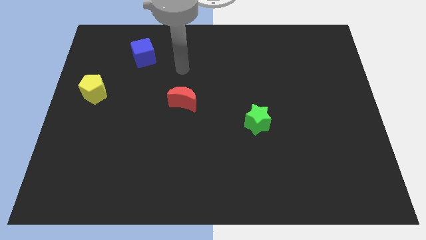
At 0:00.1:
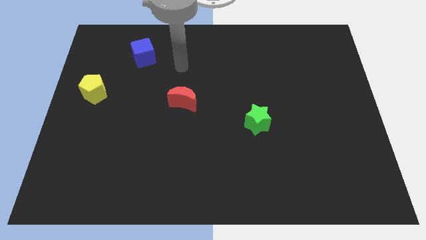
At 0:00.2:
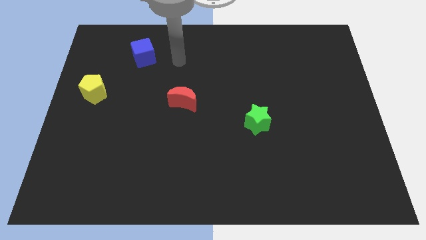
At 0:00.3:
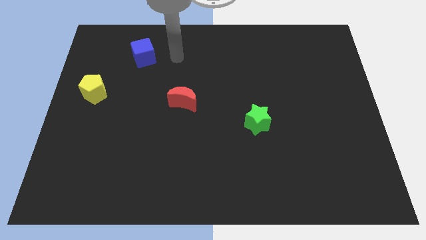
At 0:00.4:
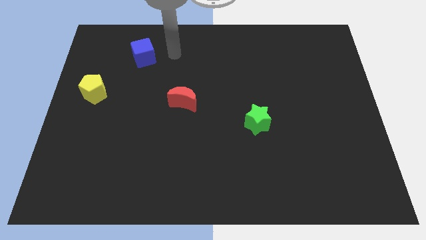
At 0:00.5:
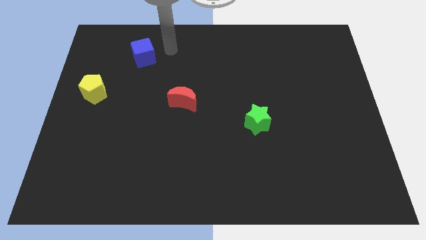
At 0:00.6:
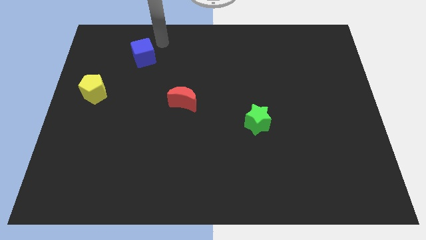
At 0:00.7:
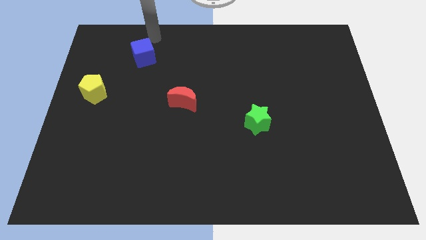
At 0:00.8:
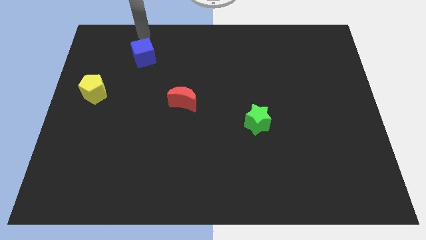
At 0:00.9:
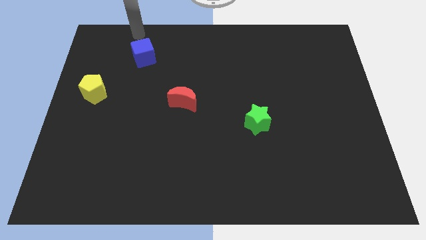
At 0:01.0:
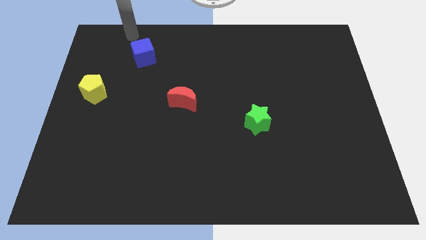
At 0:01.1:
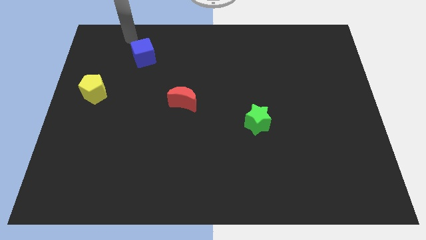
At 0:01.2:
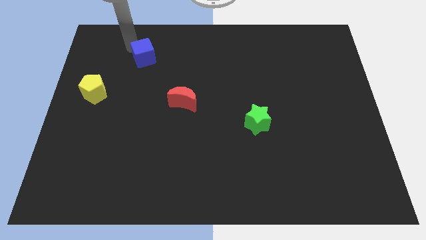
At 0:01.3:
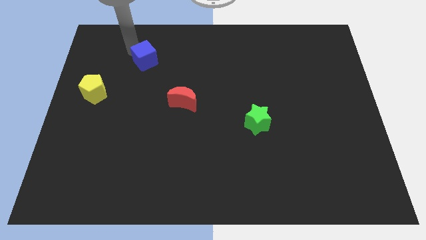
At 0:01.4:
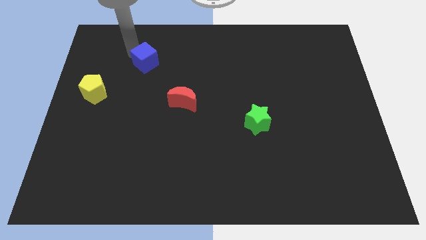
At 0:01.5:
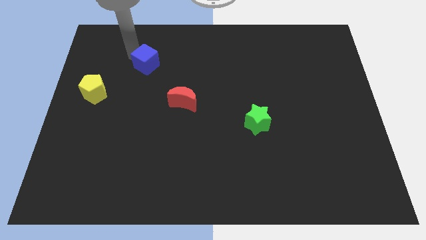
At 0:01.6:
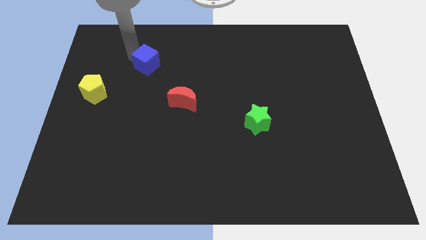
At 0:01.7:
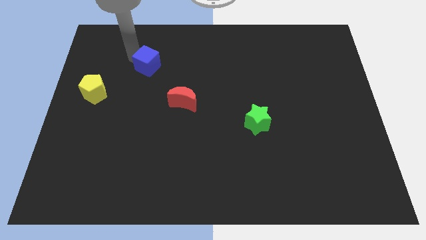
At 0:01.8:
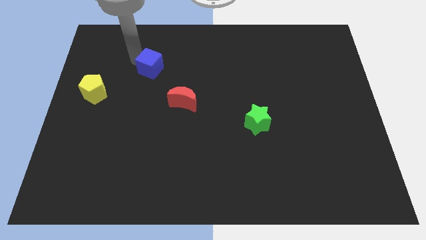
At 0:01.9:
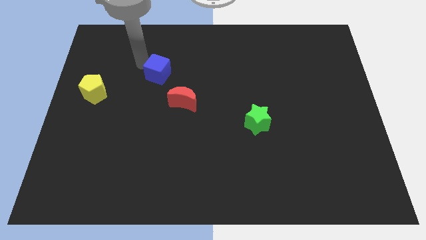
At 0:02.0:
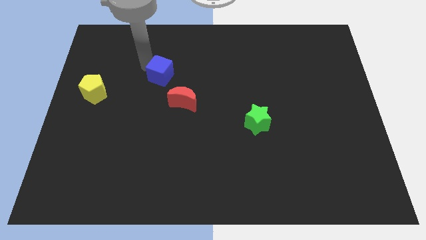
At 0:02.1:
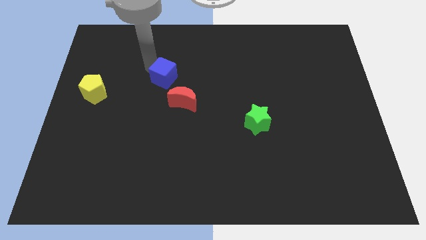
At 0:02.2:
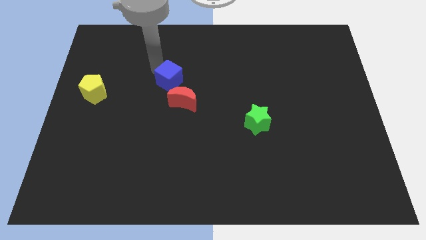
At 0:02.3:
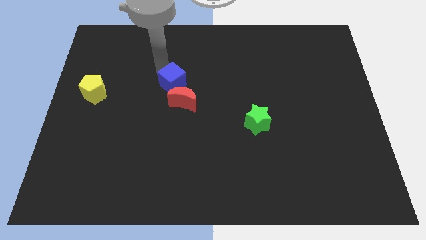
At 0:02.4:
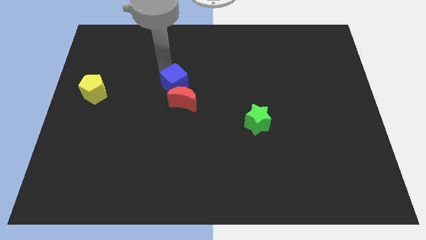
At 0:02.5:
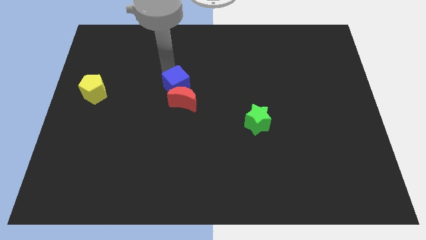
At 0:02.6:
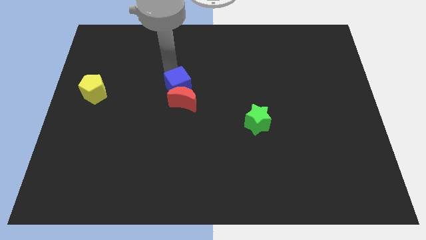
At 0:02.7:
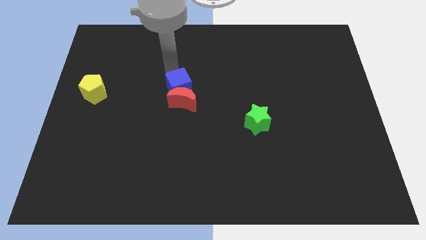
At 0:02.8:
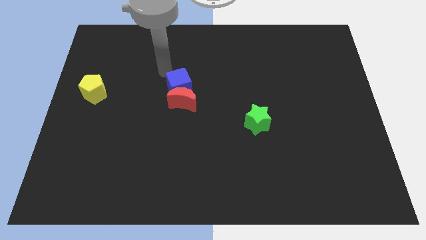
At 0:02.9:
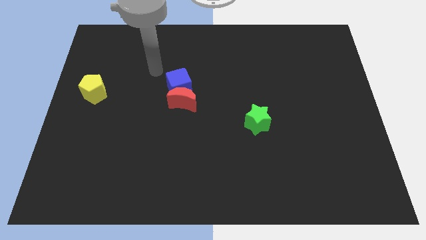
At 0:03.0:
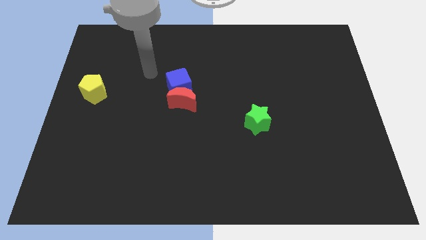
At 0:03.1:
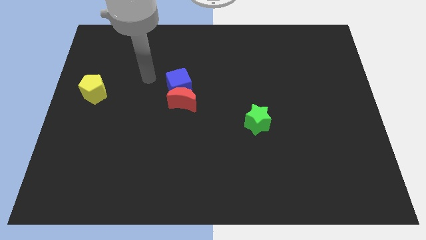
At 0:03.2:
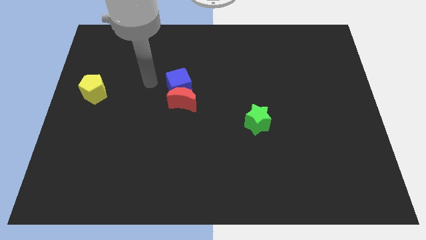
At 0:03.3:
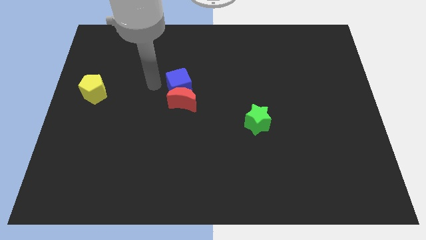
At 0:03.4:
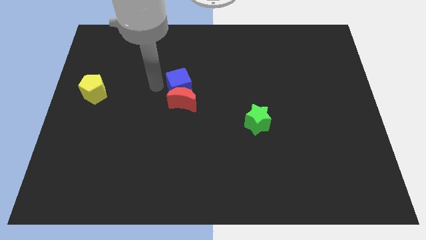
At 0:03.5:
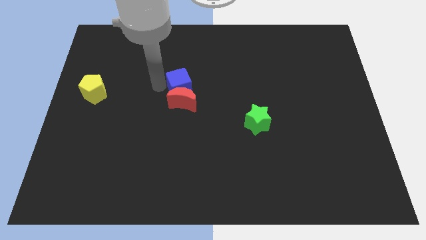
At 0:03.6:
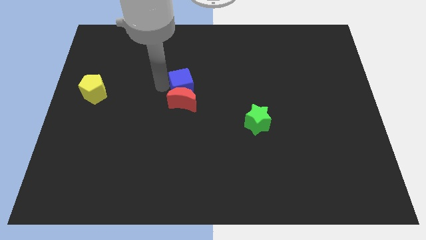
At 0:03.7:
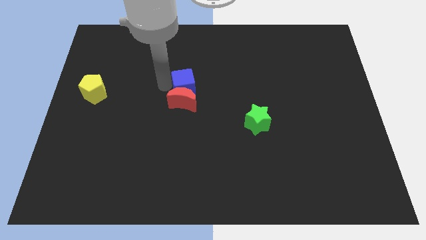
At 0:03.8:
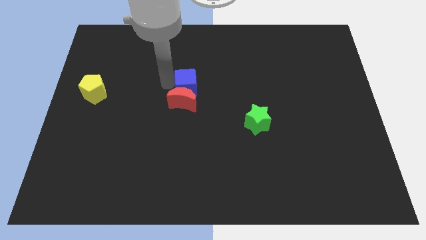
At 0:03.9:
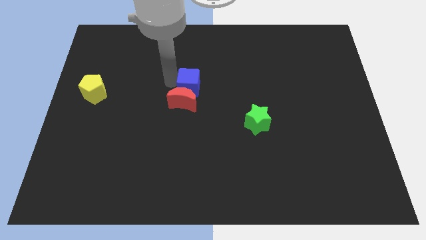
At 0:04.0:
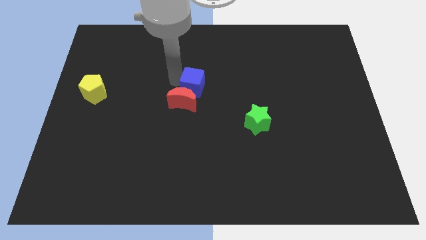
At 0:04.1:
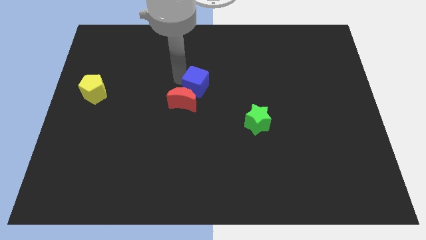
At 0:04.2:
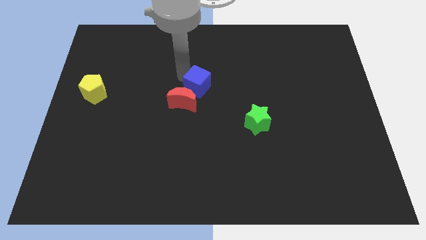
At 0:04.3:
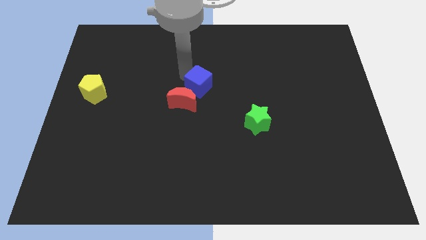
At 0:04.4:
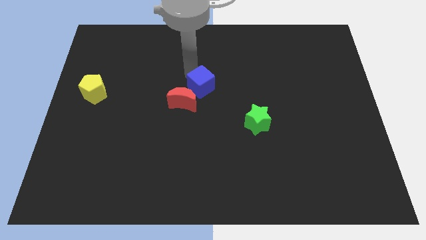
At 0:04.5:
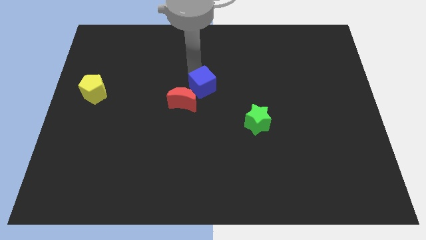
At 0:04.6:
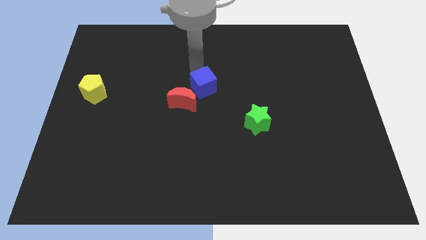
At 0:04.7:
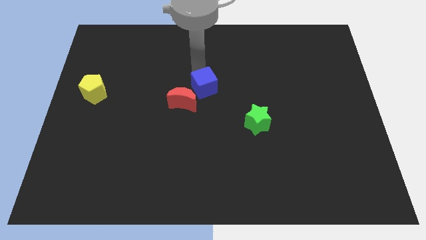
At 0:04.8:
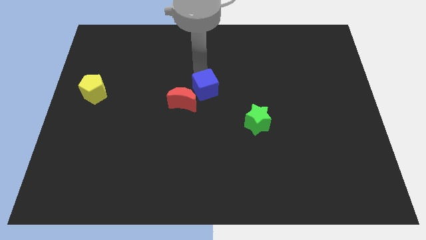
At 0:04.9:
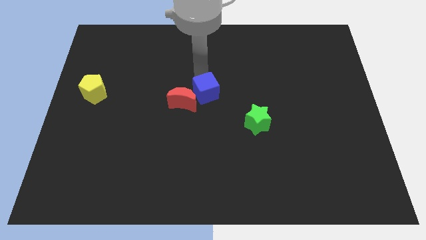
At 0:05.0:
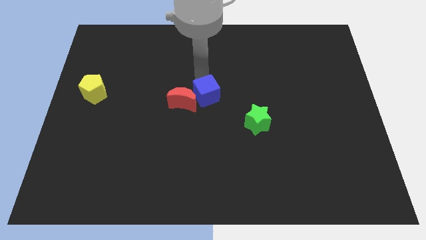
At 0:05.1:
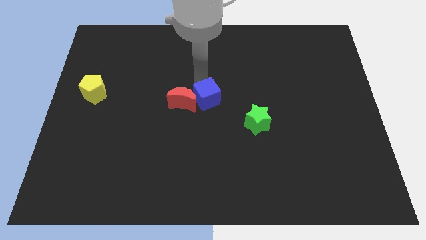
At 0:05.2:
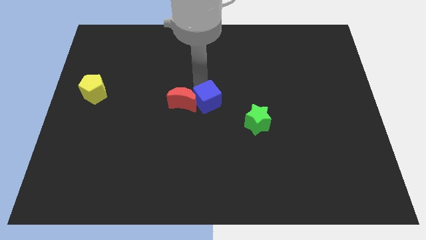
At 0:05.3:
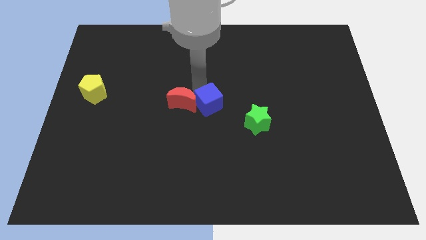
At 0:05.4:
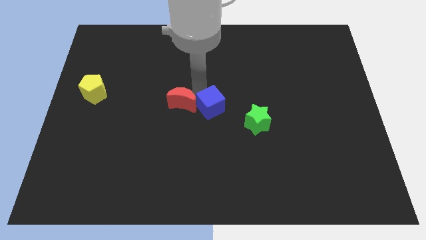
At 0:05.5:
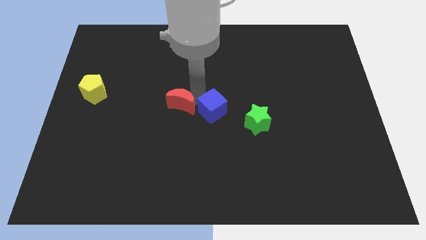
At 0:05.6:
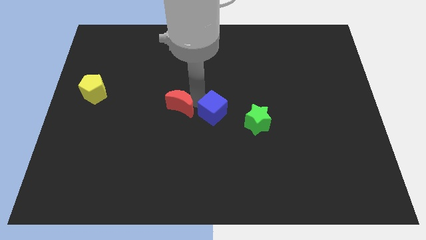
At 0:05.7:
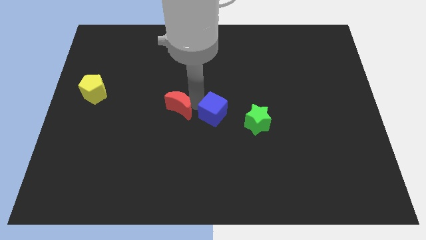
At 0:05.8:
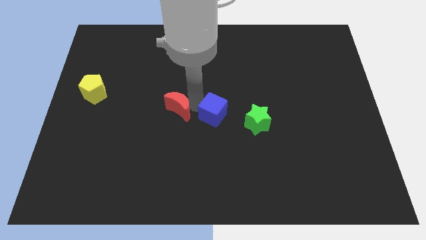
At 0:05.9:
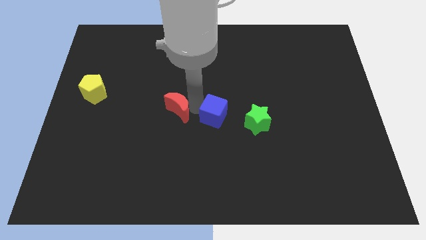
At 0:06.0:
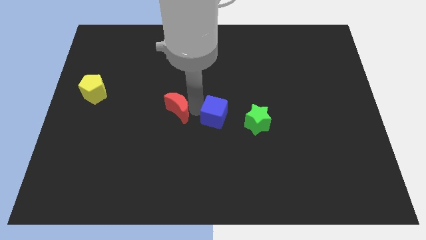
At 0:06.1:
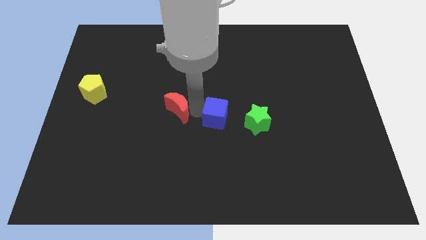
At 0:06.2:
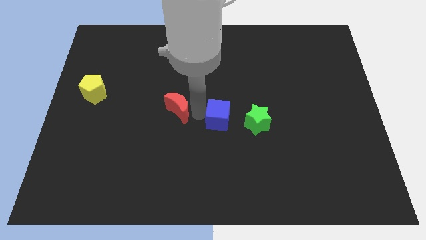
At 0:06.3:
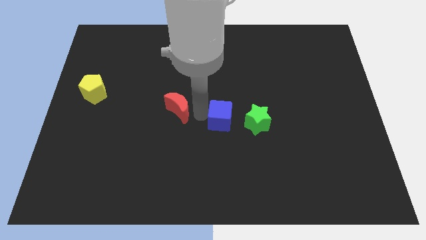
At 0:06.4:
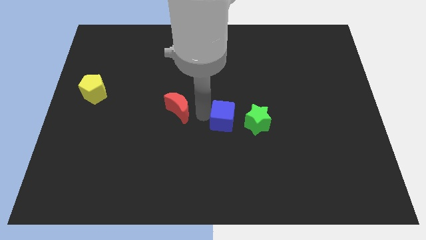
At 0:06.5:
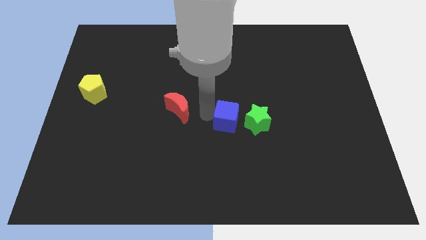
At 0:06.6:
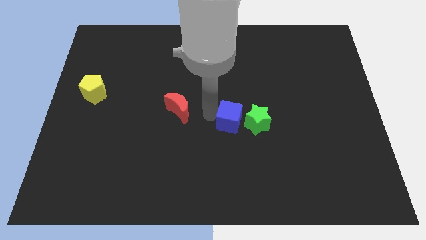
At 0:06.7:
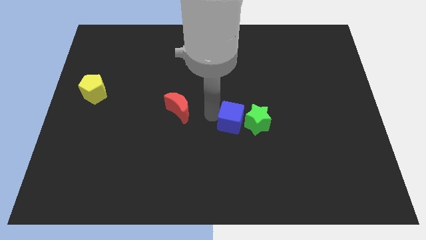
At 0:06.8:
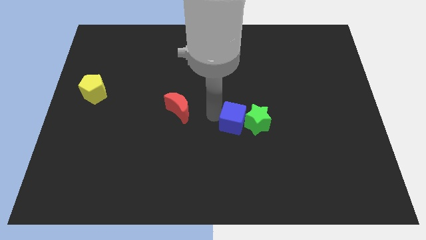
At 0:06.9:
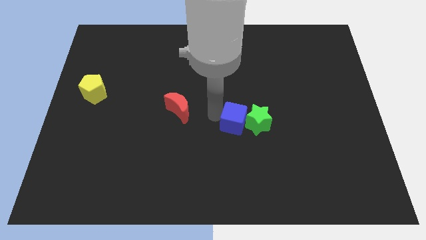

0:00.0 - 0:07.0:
move the cube next to the green block

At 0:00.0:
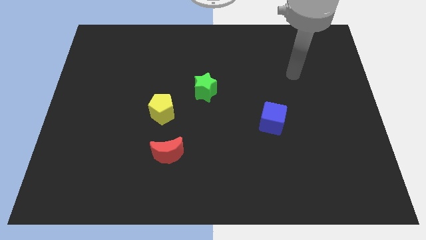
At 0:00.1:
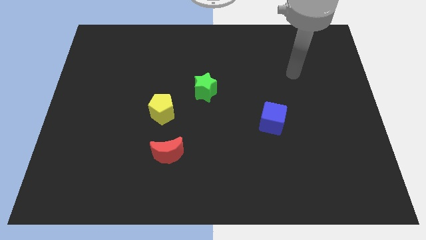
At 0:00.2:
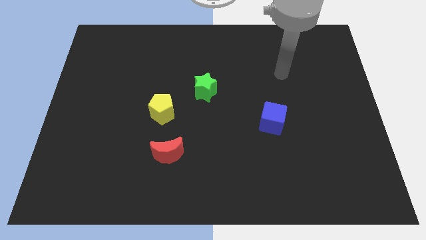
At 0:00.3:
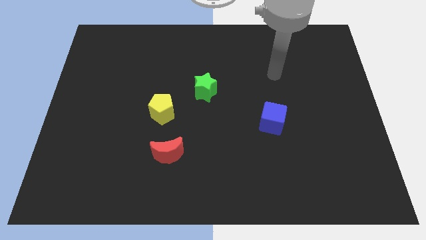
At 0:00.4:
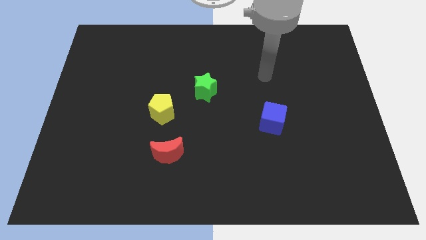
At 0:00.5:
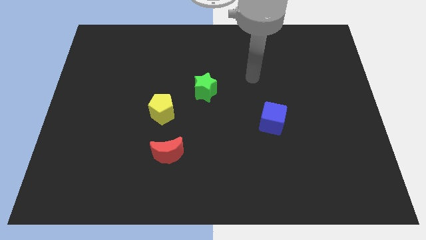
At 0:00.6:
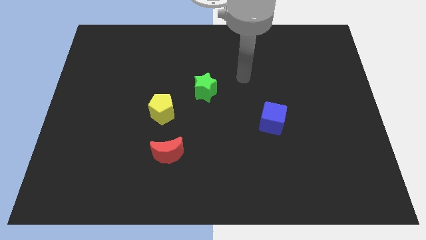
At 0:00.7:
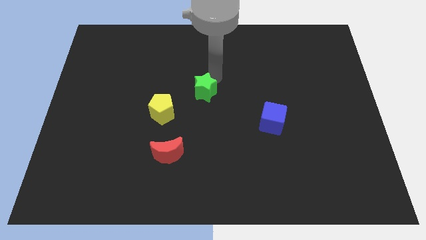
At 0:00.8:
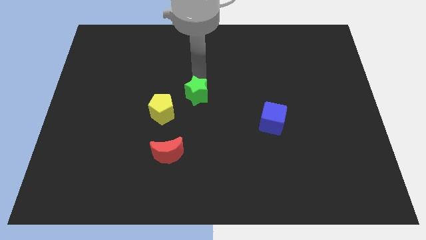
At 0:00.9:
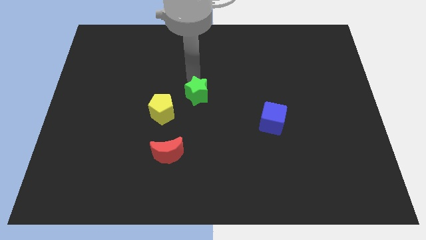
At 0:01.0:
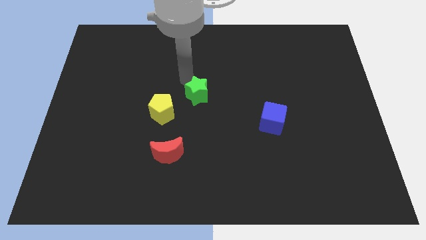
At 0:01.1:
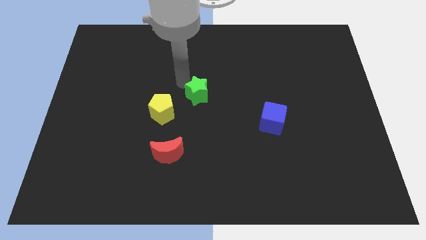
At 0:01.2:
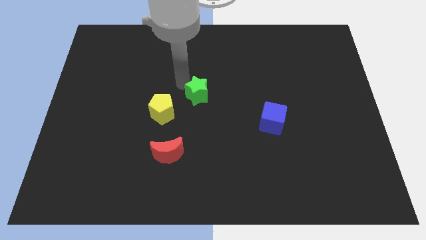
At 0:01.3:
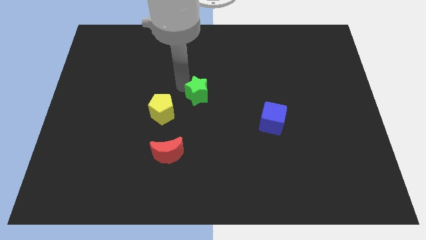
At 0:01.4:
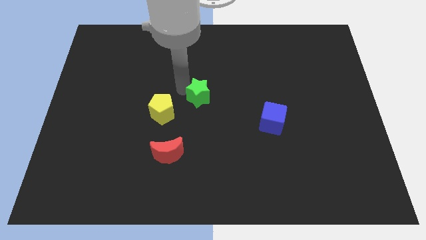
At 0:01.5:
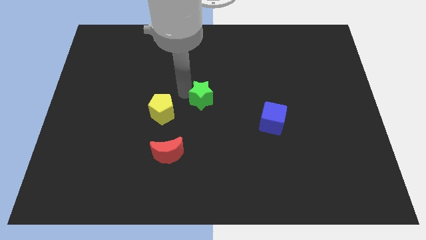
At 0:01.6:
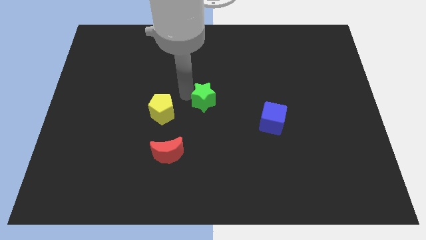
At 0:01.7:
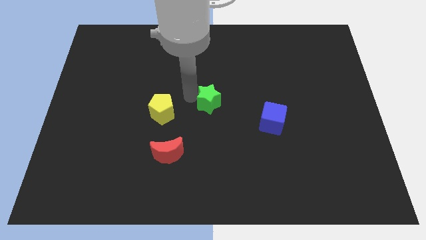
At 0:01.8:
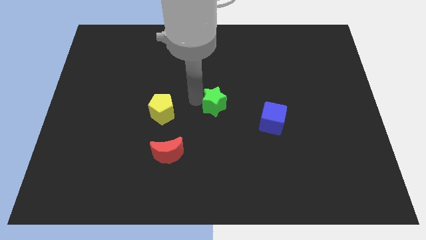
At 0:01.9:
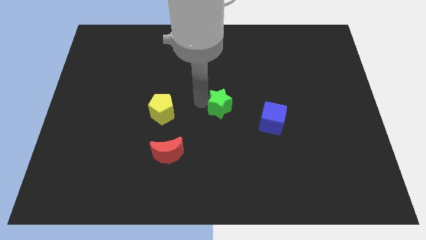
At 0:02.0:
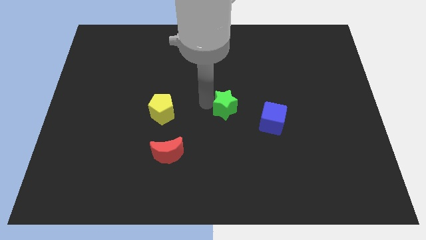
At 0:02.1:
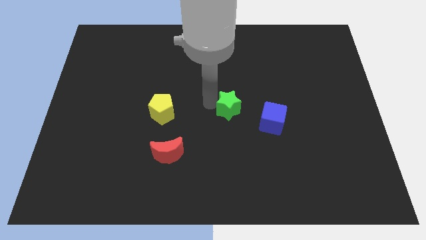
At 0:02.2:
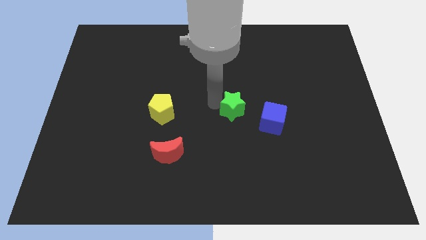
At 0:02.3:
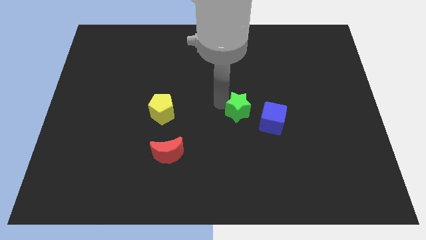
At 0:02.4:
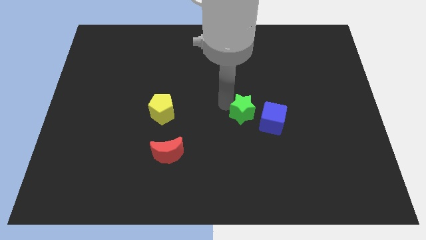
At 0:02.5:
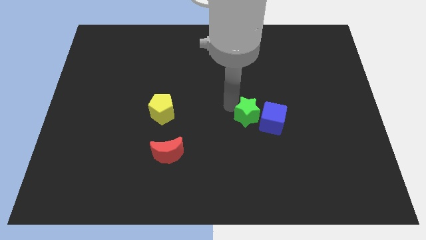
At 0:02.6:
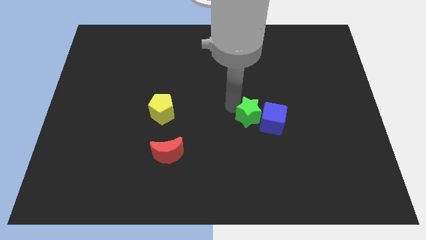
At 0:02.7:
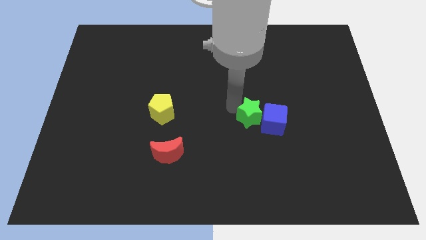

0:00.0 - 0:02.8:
put the green star next to the blue cube
